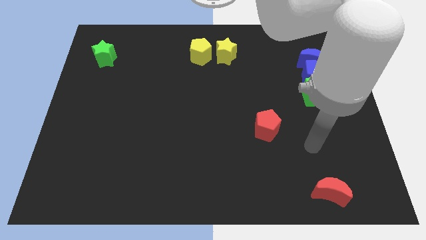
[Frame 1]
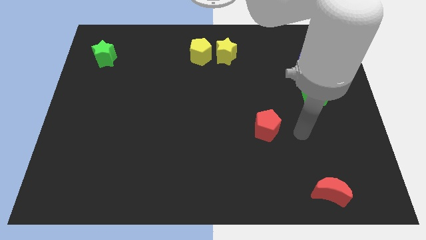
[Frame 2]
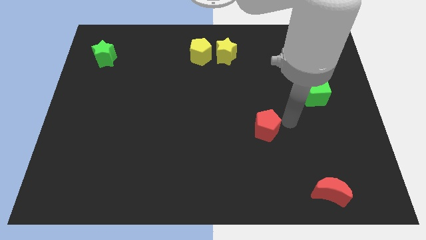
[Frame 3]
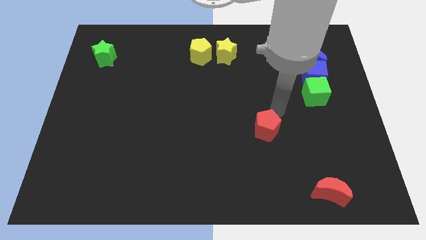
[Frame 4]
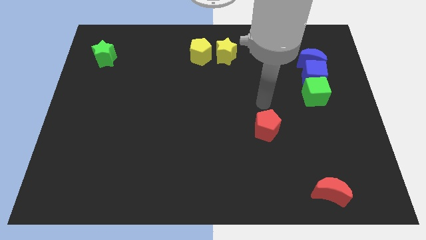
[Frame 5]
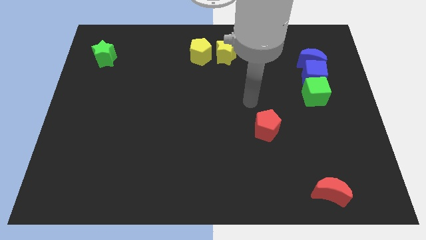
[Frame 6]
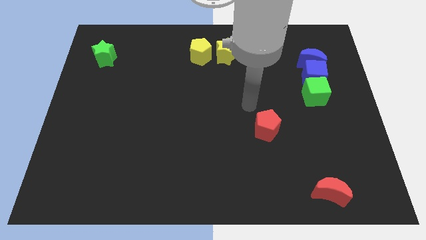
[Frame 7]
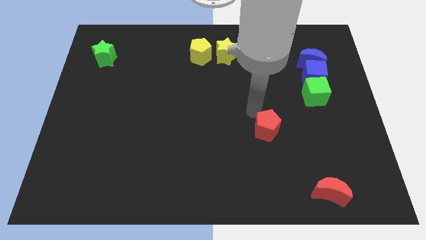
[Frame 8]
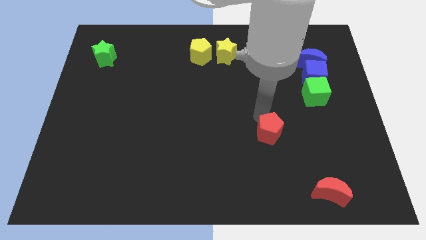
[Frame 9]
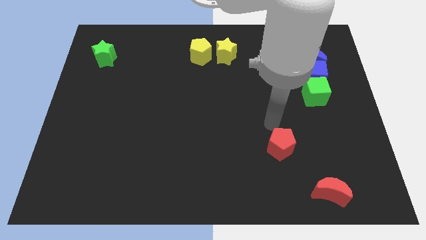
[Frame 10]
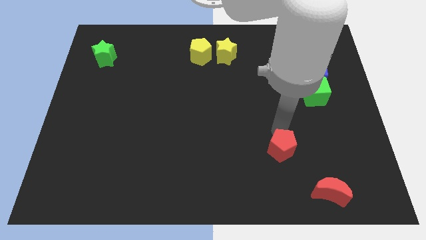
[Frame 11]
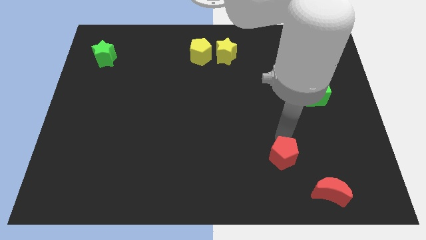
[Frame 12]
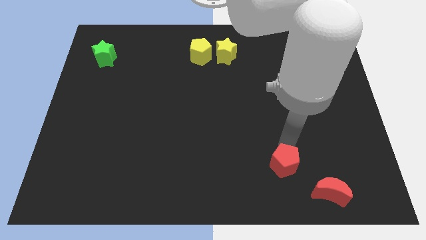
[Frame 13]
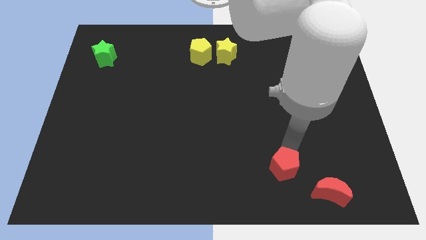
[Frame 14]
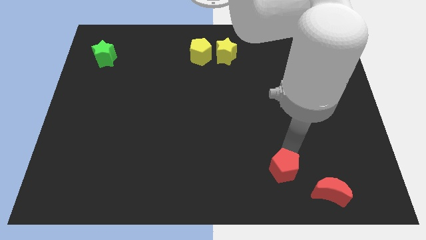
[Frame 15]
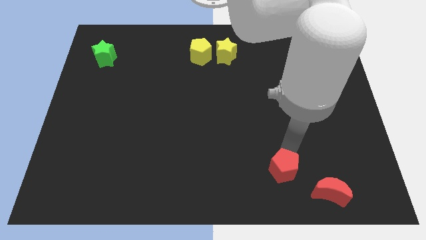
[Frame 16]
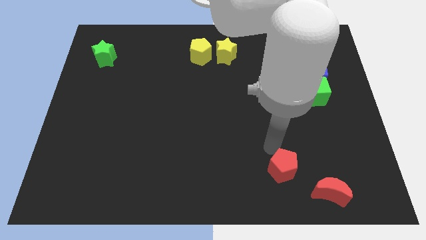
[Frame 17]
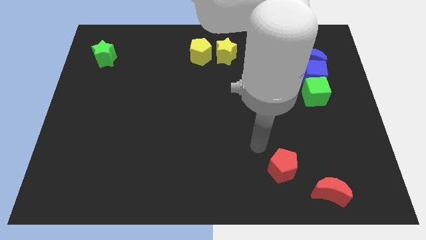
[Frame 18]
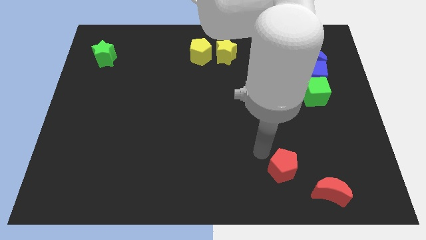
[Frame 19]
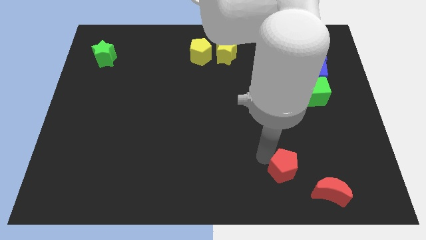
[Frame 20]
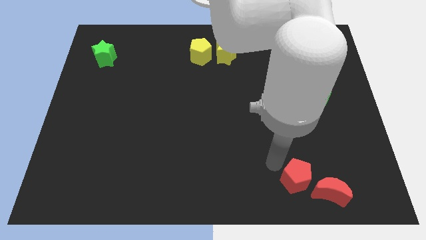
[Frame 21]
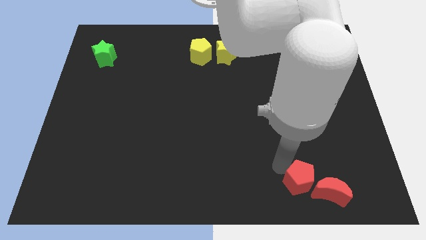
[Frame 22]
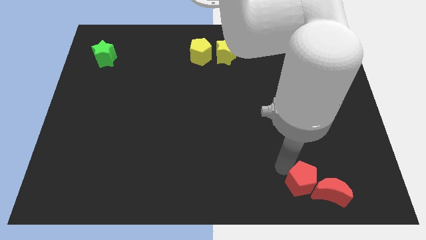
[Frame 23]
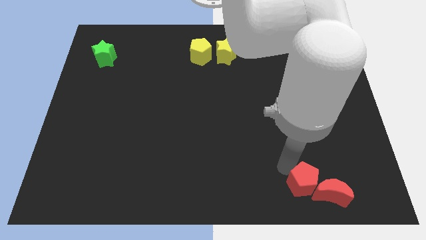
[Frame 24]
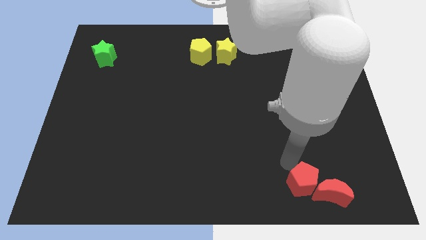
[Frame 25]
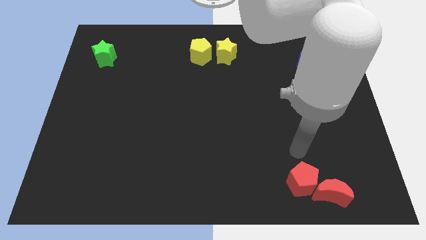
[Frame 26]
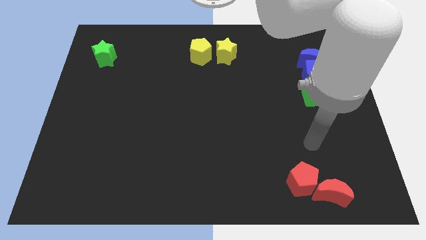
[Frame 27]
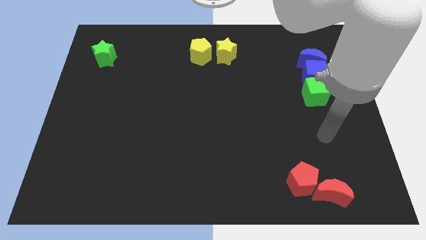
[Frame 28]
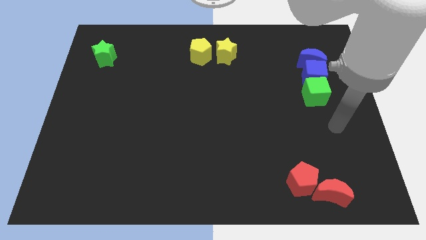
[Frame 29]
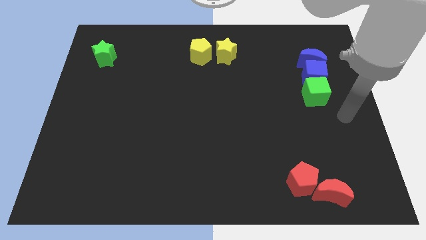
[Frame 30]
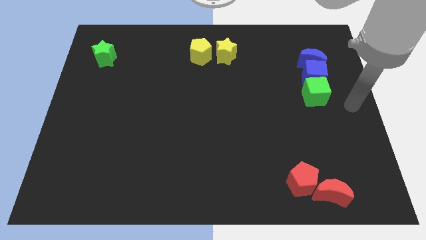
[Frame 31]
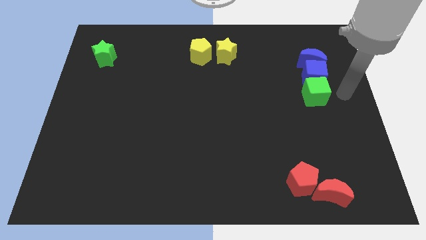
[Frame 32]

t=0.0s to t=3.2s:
push the red pentagon into the red crescent

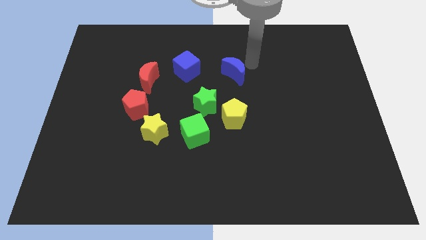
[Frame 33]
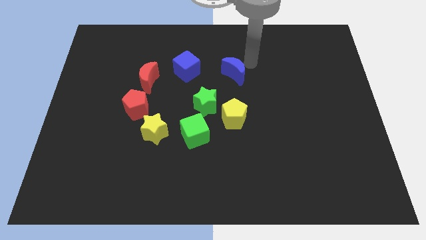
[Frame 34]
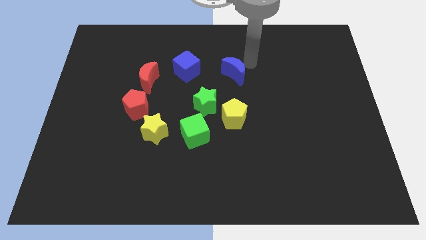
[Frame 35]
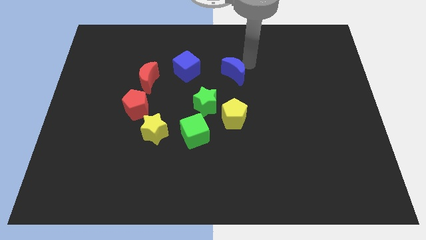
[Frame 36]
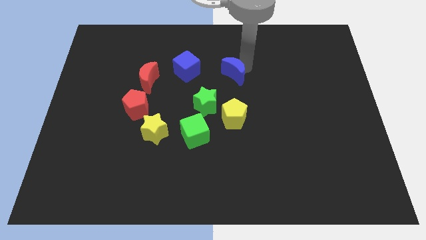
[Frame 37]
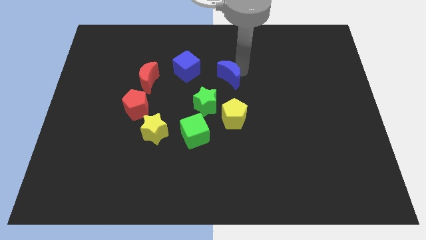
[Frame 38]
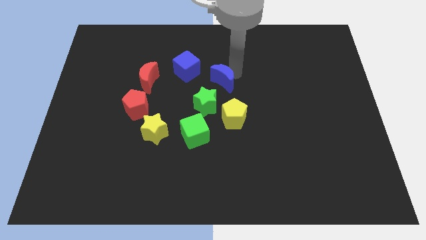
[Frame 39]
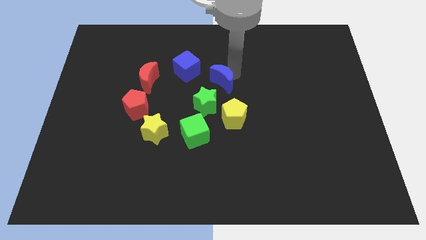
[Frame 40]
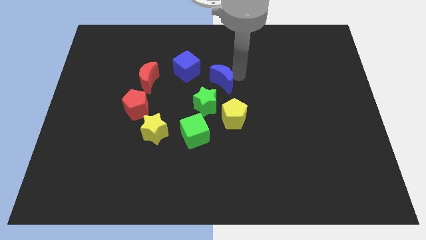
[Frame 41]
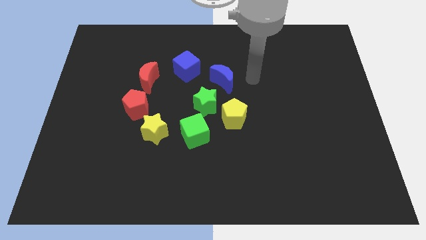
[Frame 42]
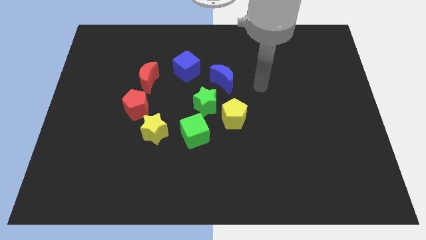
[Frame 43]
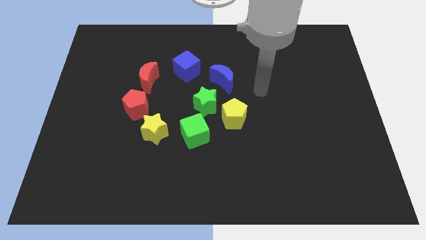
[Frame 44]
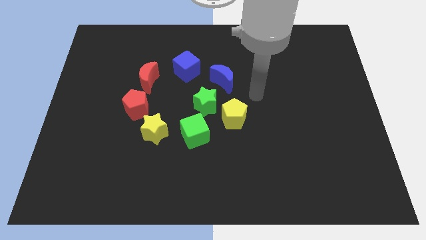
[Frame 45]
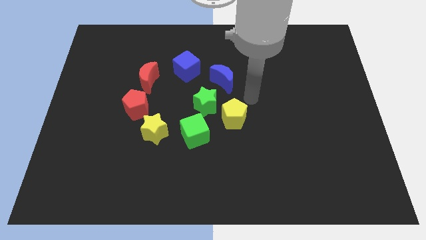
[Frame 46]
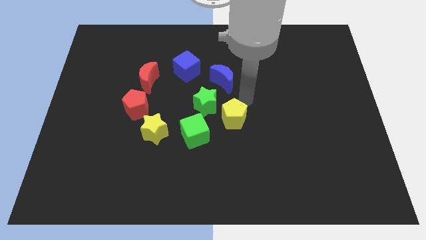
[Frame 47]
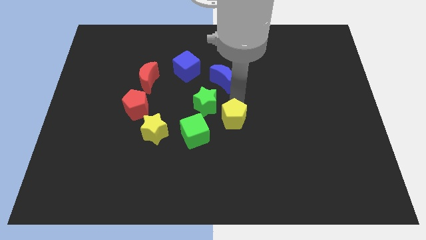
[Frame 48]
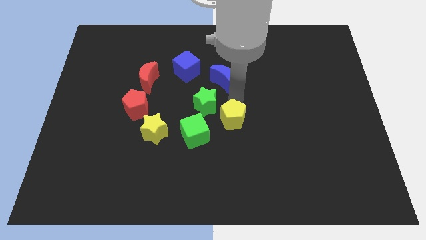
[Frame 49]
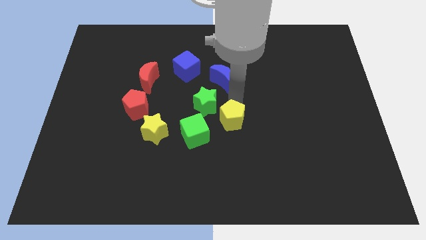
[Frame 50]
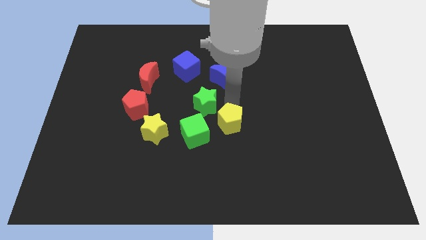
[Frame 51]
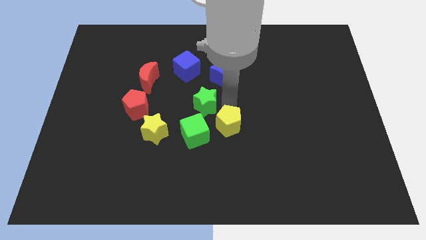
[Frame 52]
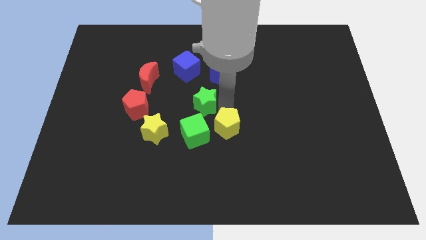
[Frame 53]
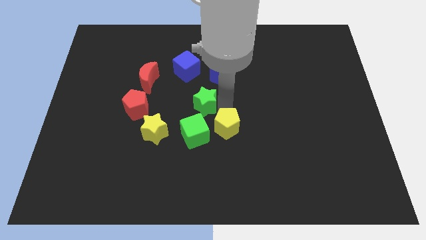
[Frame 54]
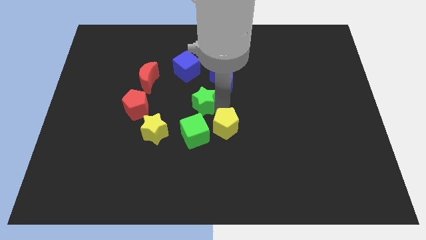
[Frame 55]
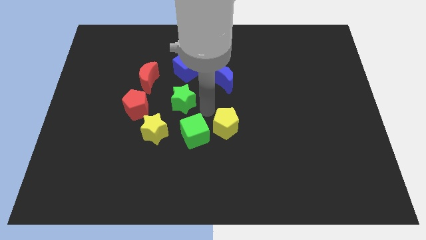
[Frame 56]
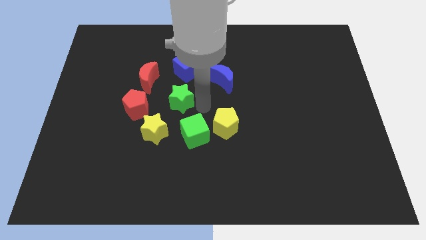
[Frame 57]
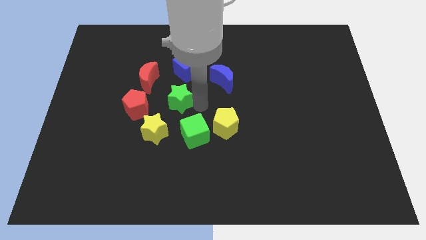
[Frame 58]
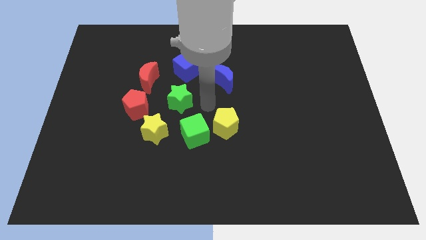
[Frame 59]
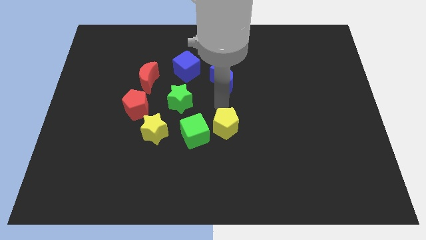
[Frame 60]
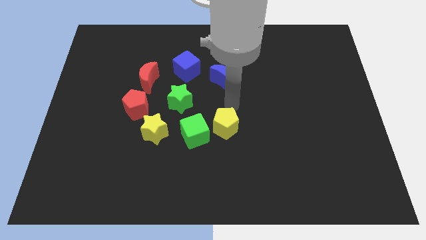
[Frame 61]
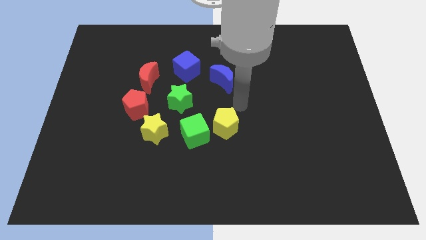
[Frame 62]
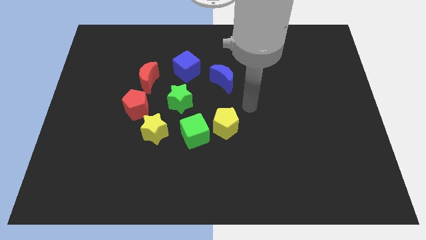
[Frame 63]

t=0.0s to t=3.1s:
push the blue crescent towards the green star

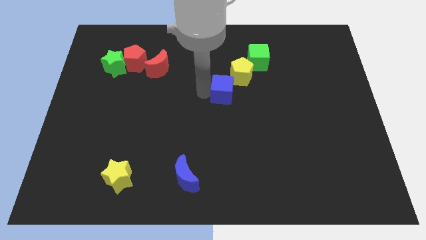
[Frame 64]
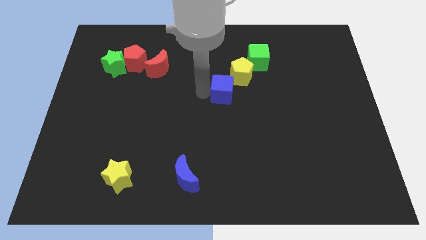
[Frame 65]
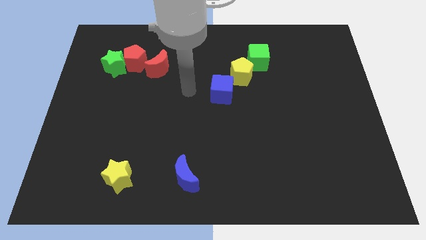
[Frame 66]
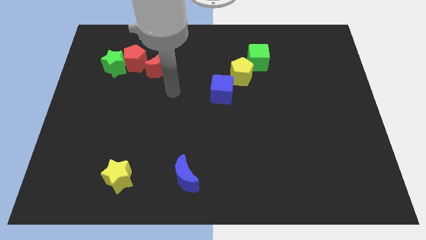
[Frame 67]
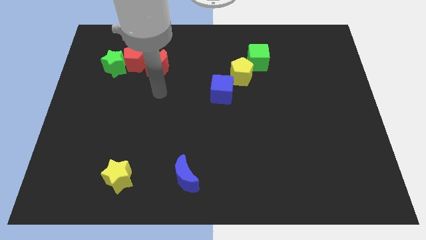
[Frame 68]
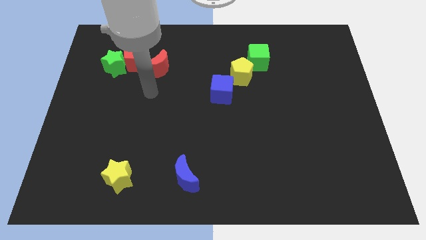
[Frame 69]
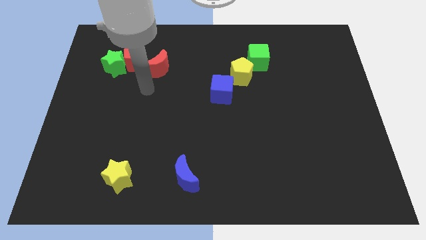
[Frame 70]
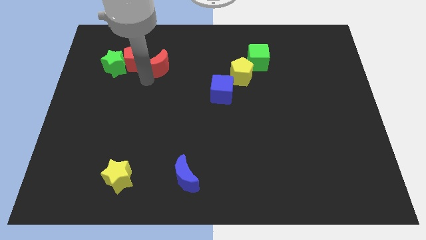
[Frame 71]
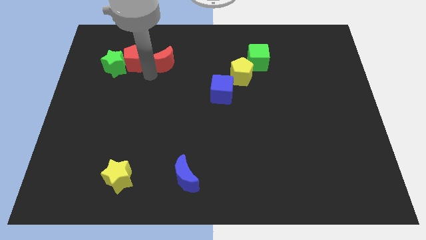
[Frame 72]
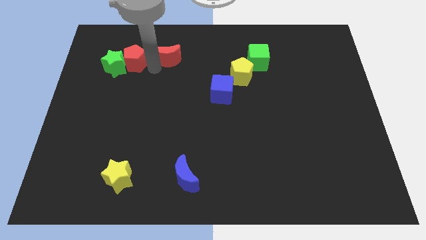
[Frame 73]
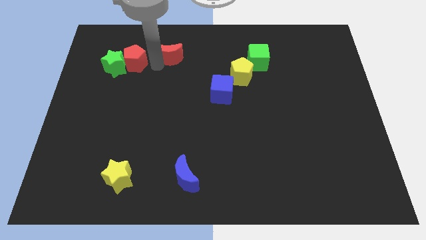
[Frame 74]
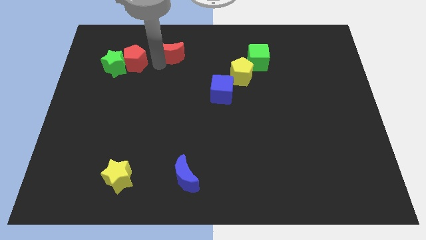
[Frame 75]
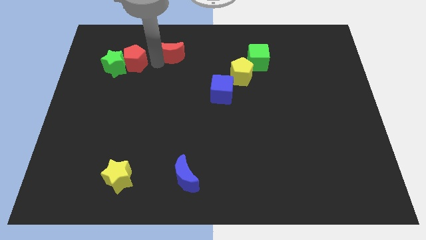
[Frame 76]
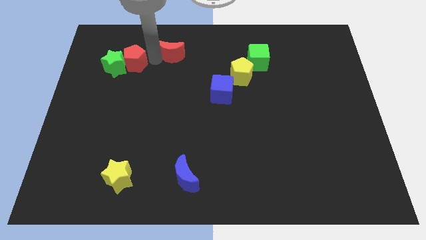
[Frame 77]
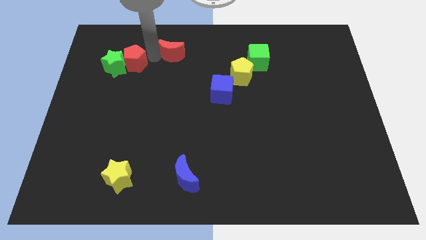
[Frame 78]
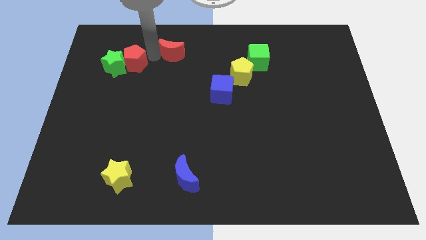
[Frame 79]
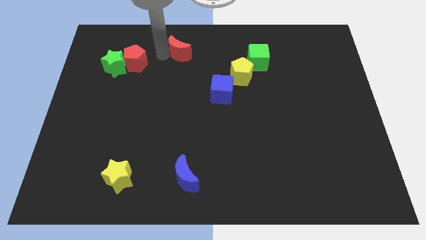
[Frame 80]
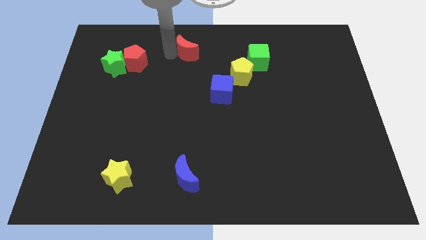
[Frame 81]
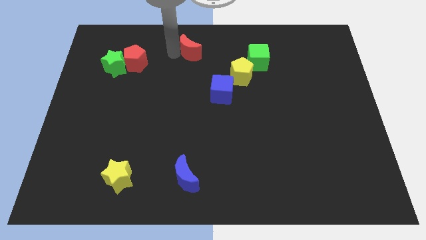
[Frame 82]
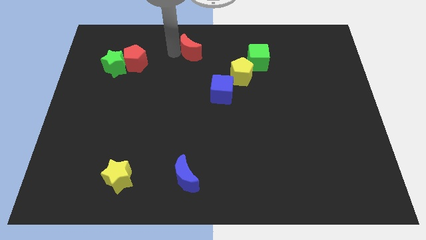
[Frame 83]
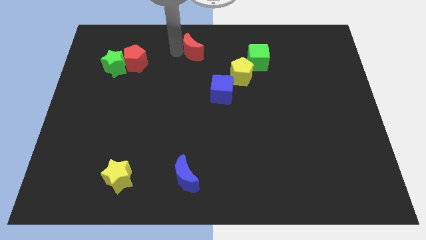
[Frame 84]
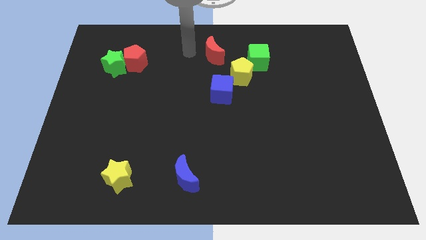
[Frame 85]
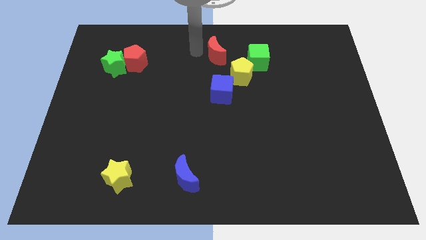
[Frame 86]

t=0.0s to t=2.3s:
move the red crescent to the top of the blue cube

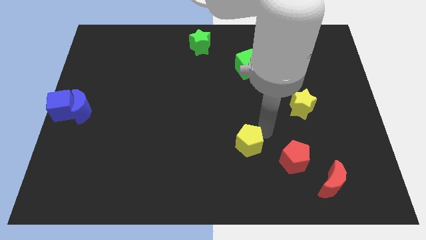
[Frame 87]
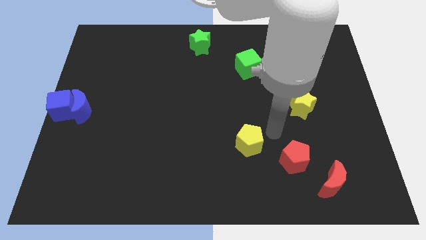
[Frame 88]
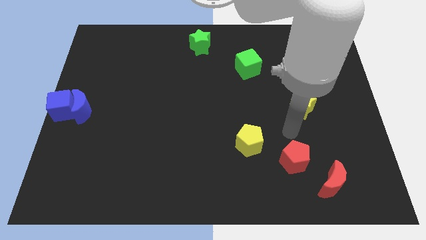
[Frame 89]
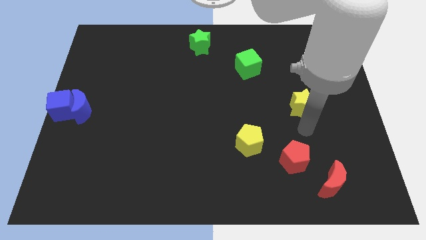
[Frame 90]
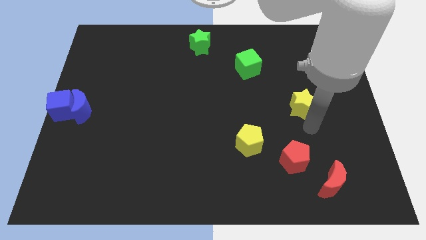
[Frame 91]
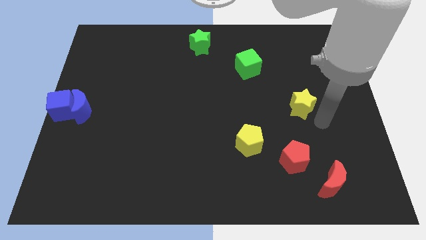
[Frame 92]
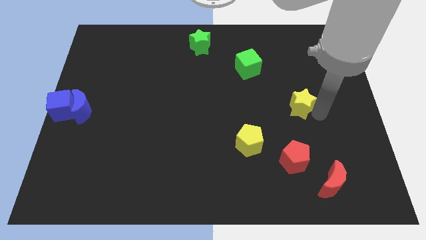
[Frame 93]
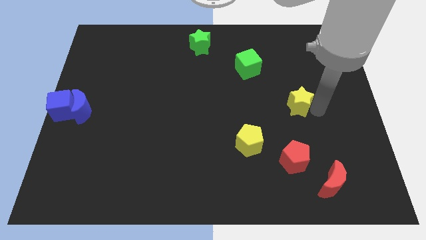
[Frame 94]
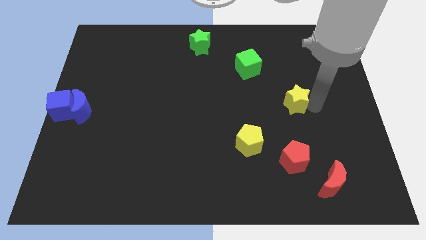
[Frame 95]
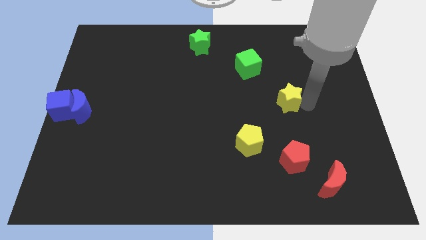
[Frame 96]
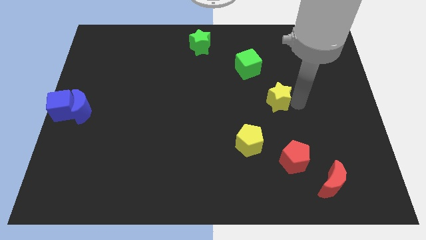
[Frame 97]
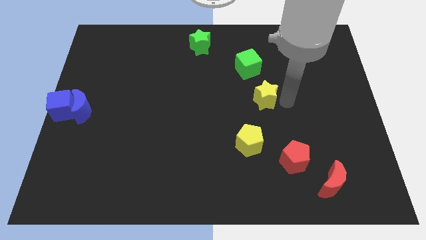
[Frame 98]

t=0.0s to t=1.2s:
put the yellow star vertically above the red pentagon
